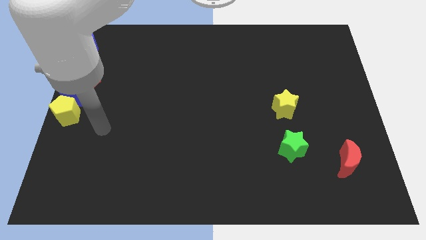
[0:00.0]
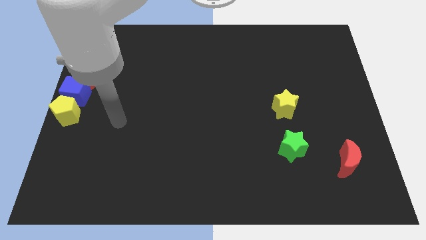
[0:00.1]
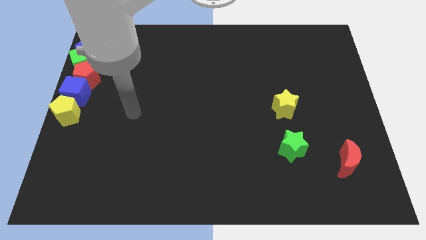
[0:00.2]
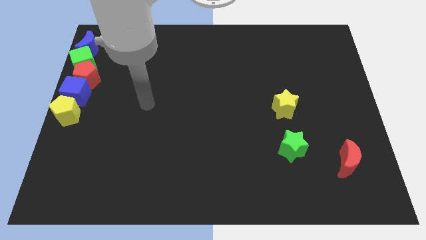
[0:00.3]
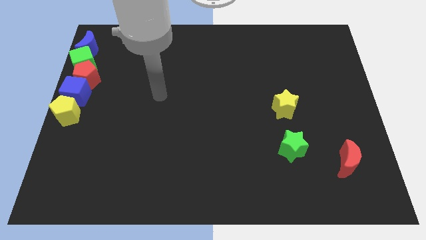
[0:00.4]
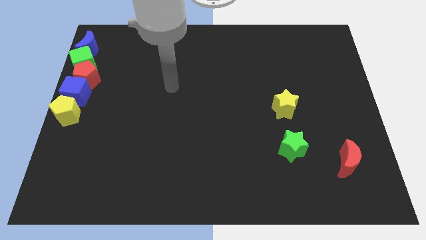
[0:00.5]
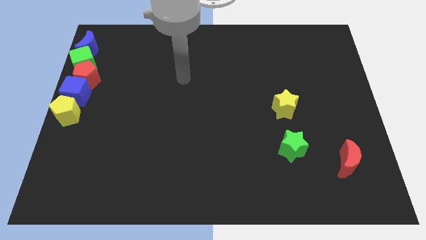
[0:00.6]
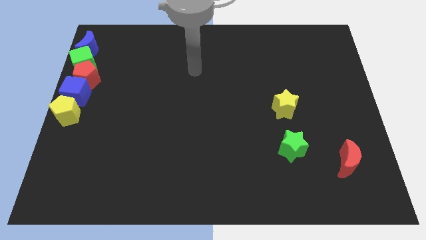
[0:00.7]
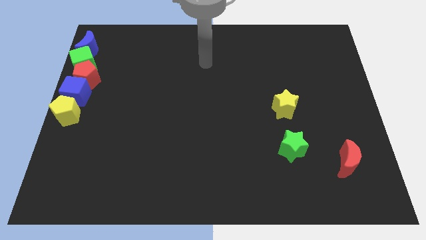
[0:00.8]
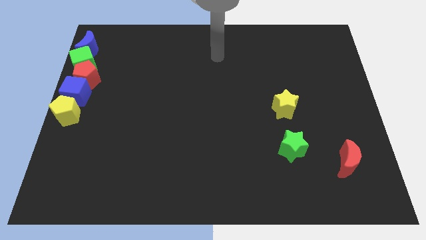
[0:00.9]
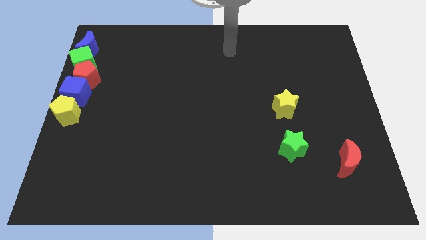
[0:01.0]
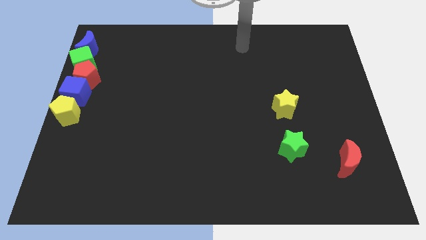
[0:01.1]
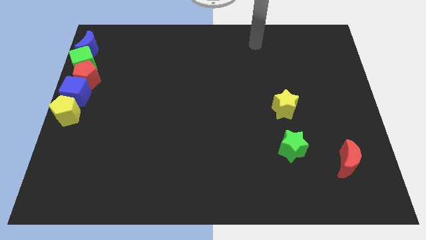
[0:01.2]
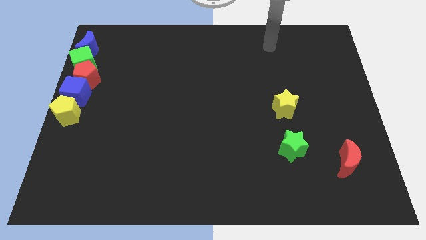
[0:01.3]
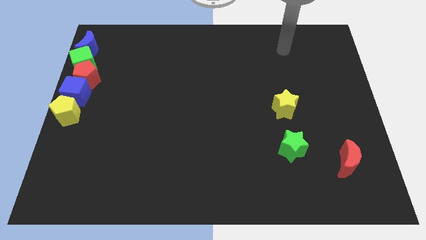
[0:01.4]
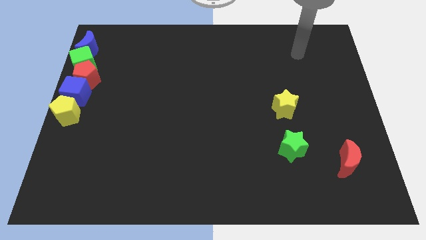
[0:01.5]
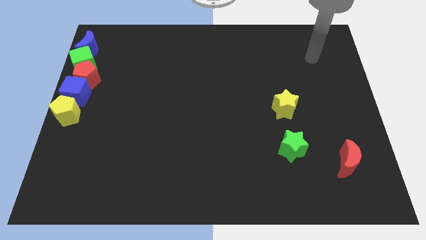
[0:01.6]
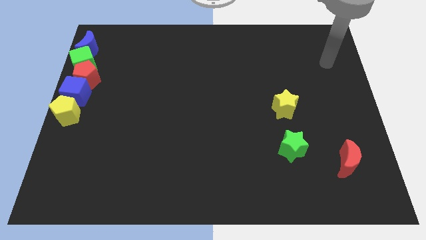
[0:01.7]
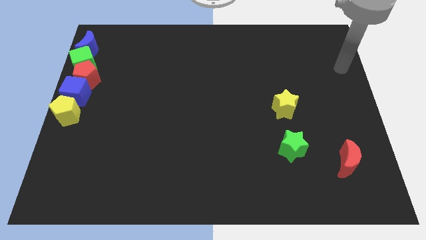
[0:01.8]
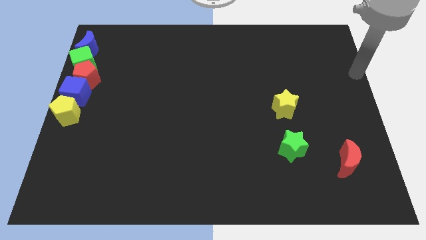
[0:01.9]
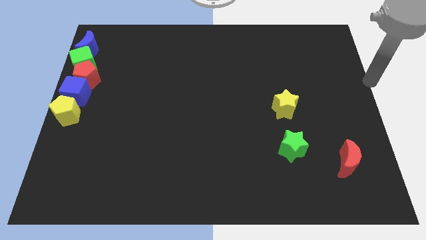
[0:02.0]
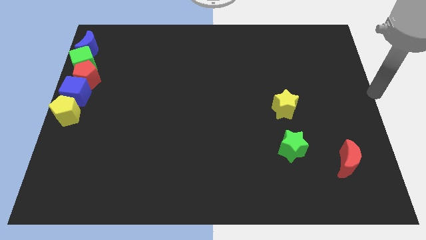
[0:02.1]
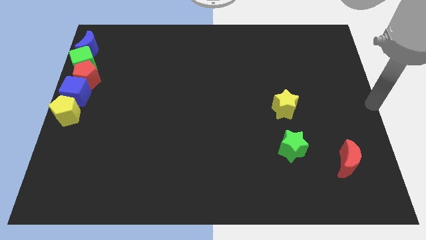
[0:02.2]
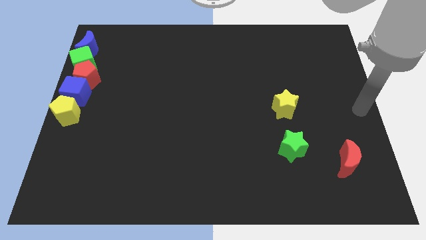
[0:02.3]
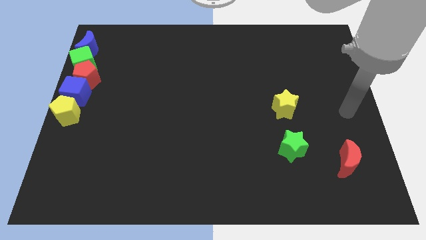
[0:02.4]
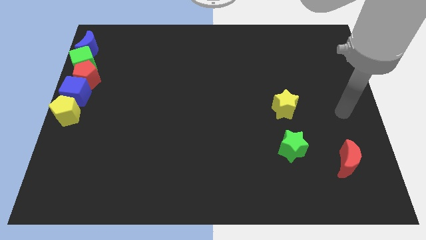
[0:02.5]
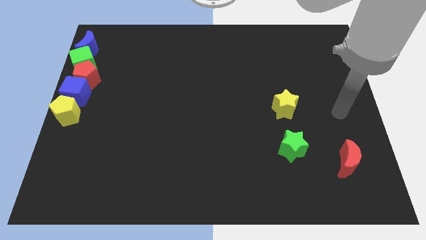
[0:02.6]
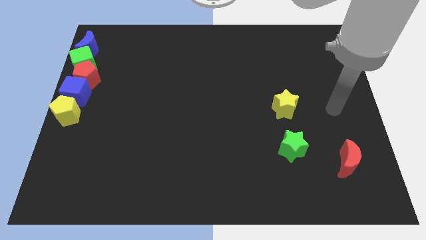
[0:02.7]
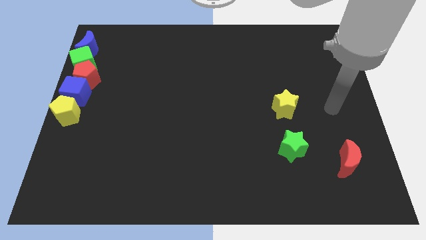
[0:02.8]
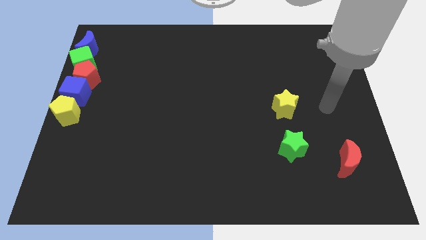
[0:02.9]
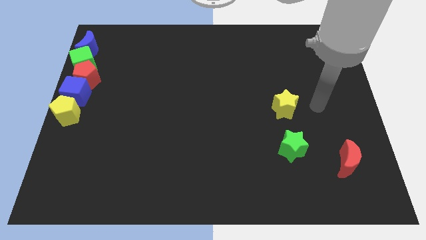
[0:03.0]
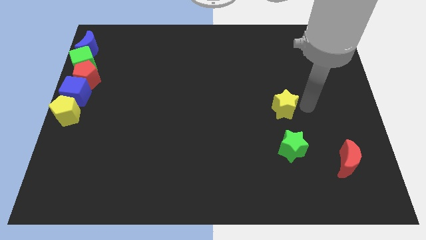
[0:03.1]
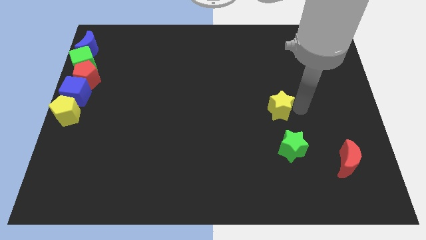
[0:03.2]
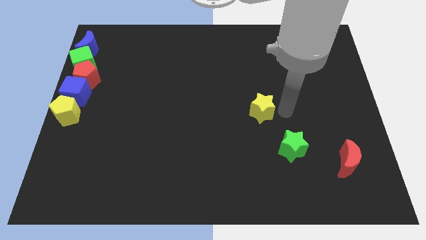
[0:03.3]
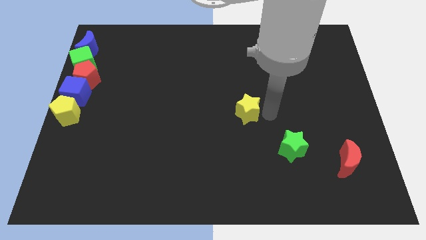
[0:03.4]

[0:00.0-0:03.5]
push the yellow star to the top left of the green star

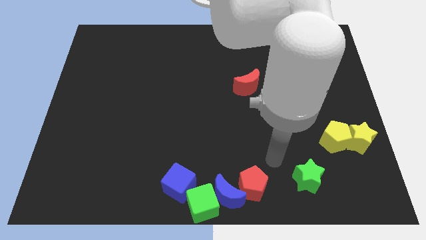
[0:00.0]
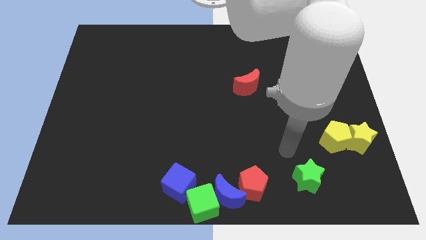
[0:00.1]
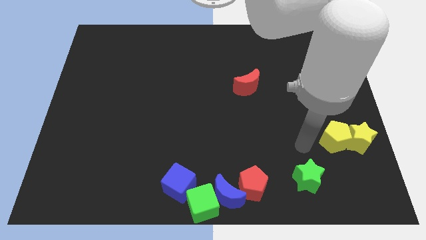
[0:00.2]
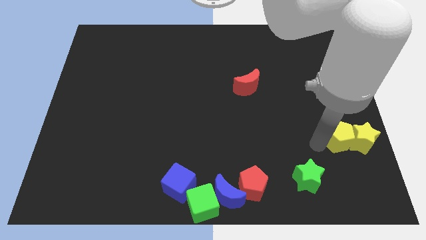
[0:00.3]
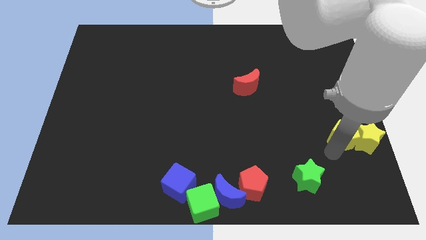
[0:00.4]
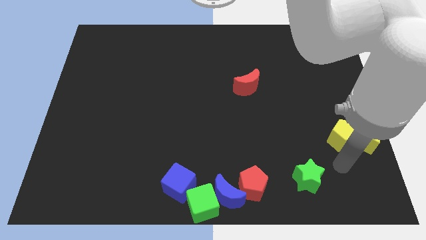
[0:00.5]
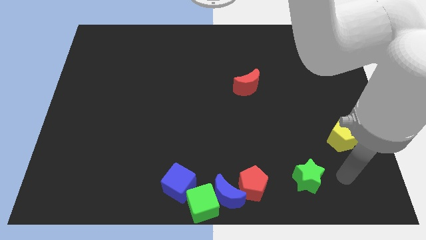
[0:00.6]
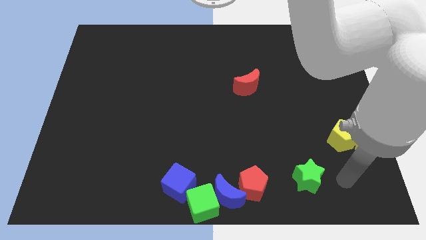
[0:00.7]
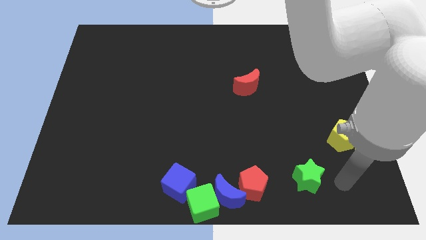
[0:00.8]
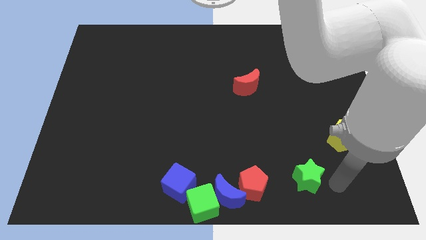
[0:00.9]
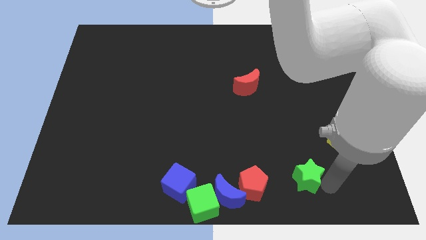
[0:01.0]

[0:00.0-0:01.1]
slightly push the yellow blocks towards the right side of the board

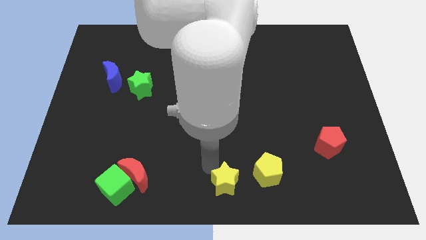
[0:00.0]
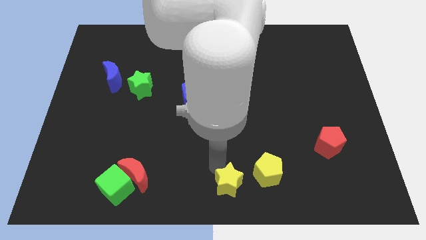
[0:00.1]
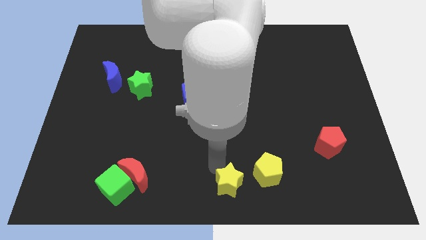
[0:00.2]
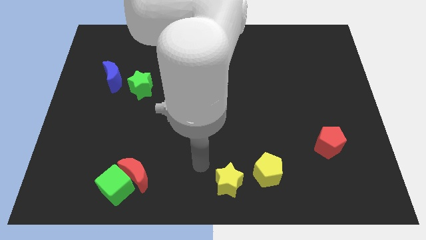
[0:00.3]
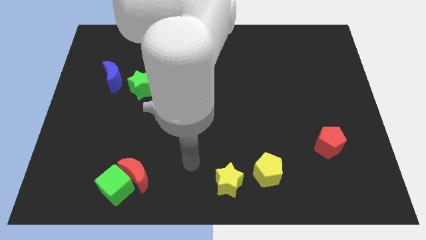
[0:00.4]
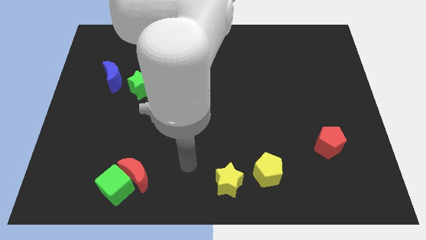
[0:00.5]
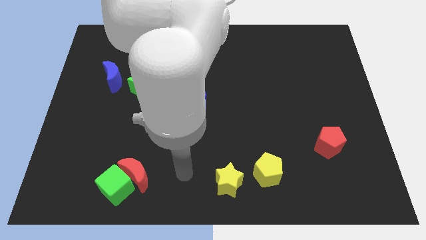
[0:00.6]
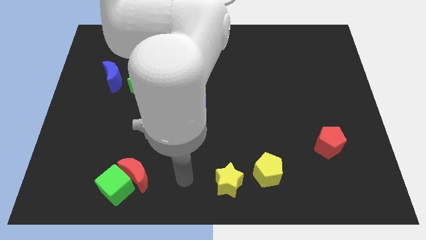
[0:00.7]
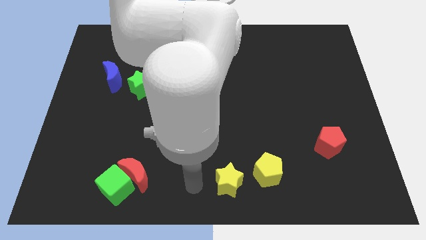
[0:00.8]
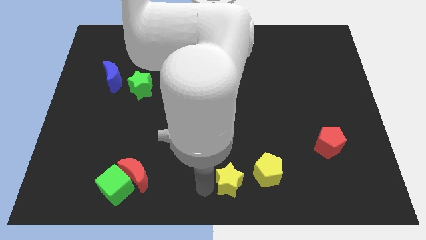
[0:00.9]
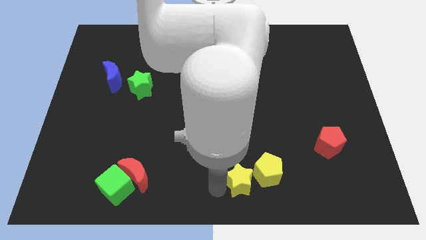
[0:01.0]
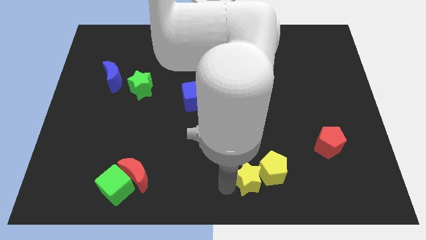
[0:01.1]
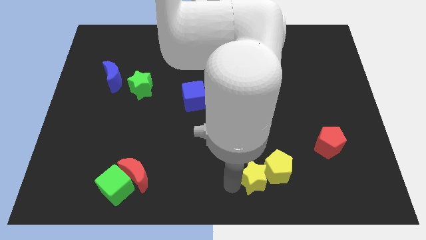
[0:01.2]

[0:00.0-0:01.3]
push the yellow star into the yellow pentagon

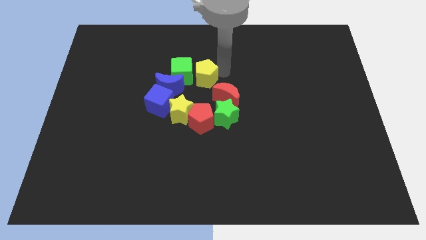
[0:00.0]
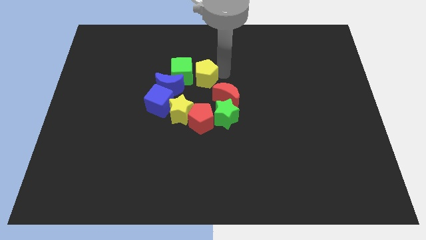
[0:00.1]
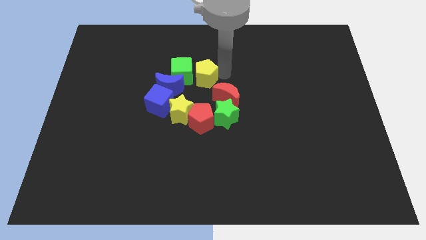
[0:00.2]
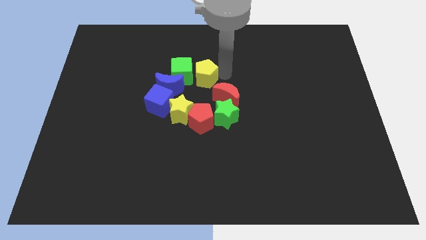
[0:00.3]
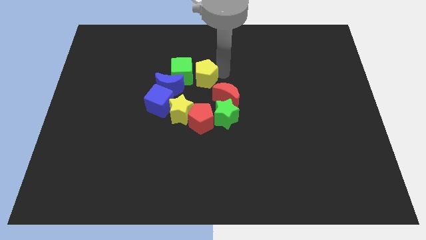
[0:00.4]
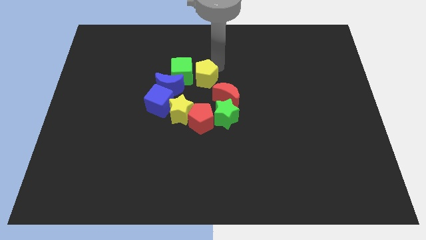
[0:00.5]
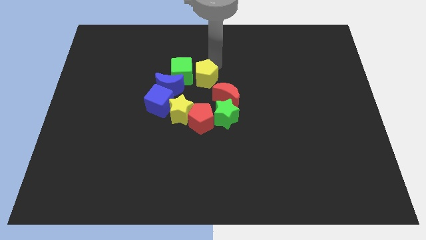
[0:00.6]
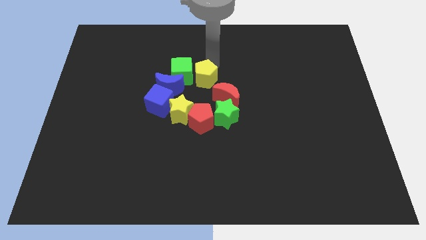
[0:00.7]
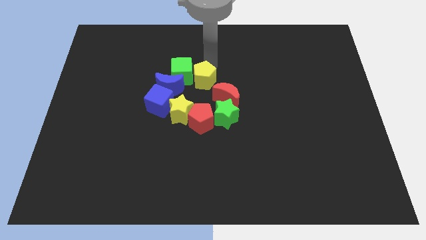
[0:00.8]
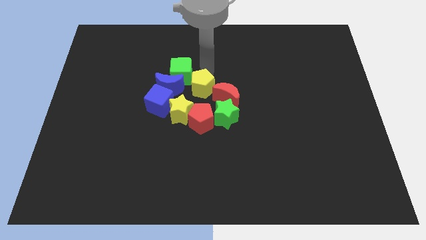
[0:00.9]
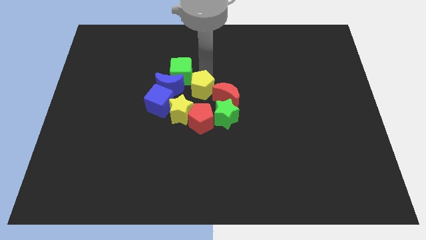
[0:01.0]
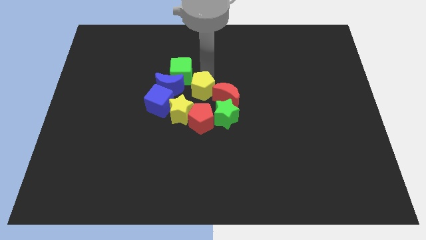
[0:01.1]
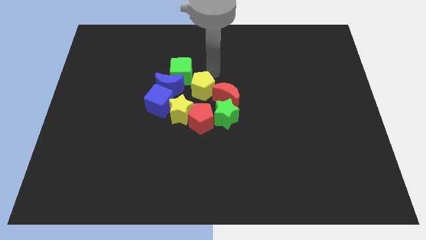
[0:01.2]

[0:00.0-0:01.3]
slightly move the yellow pentagon to the top of red pentagon

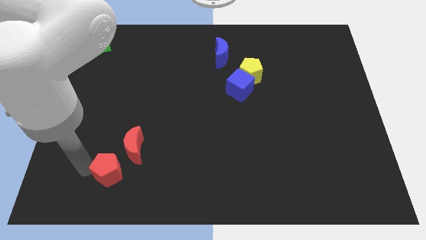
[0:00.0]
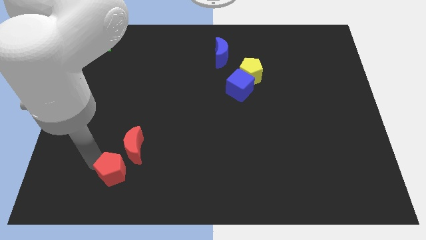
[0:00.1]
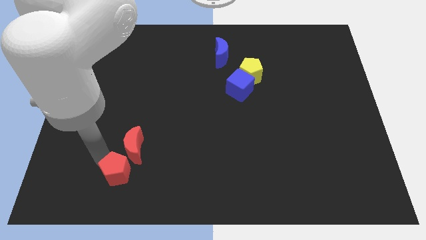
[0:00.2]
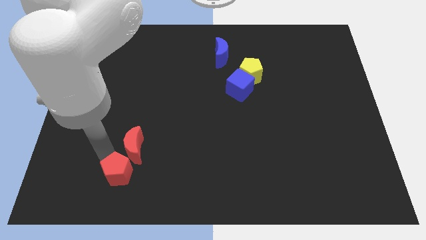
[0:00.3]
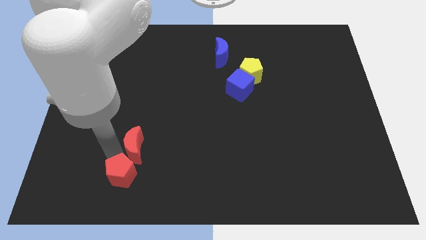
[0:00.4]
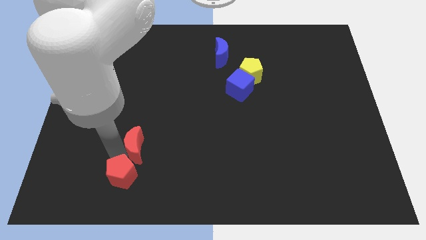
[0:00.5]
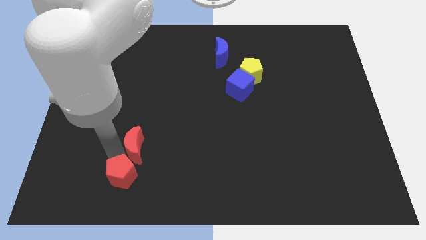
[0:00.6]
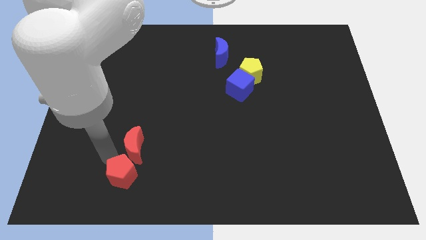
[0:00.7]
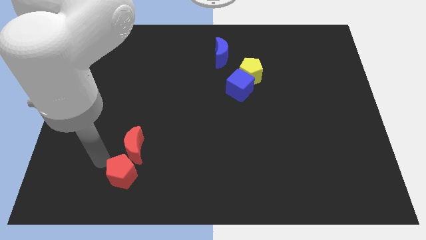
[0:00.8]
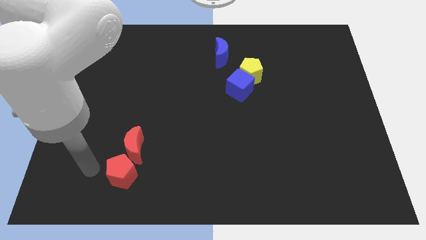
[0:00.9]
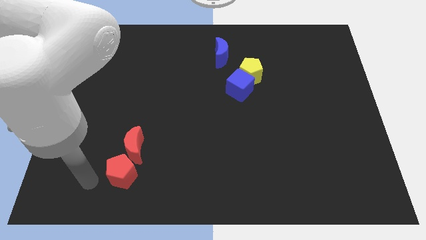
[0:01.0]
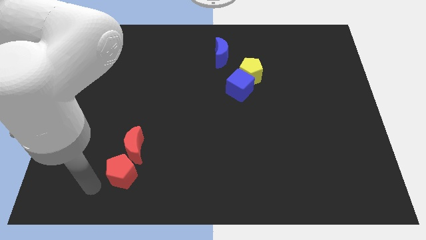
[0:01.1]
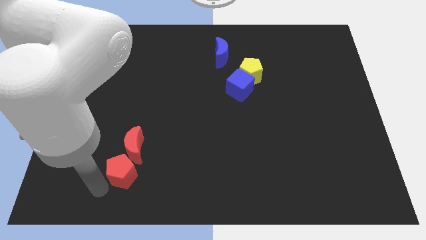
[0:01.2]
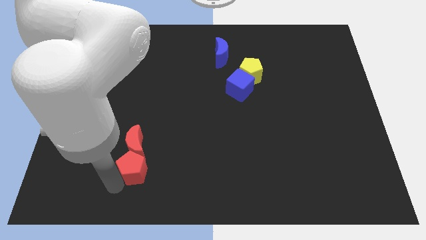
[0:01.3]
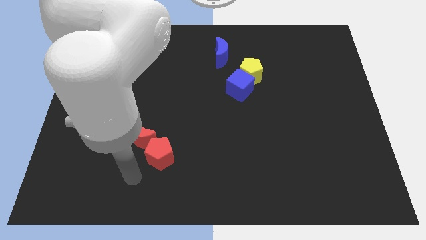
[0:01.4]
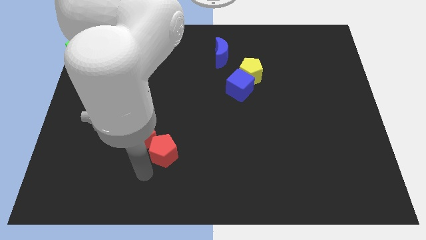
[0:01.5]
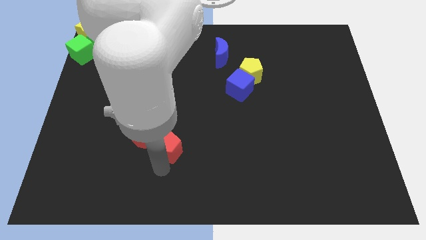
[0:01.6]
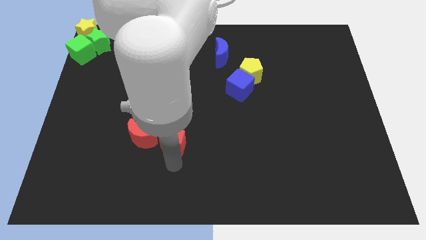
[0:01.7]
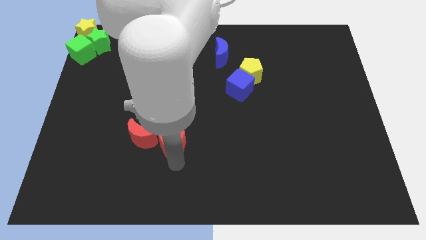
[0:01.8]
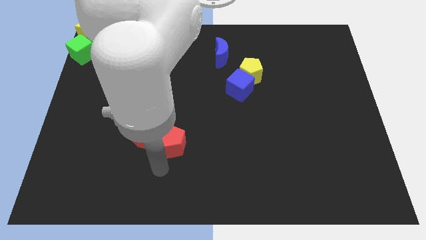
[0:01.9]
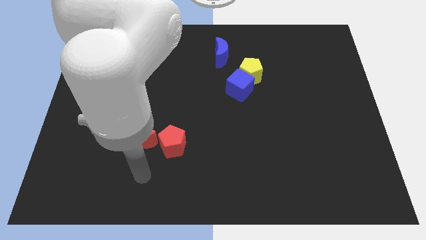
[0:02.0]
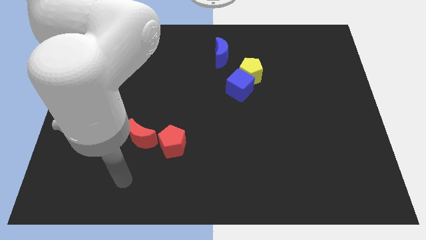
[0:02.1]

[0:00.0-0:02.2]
move the red pentagon to the right side of the red moon
